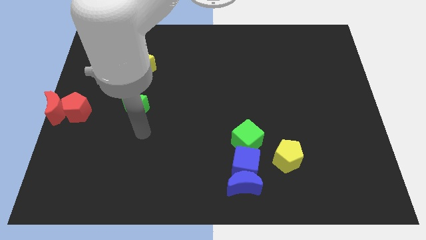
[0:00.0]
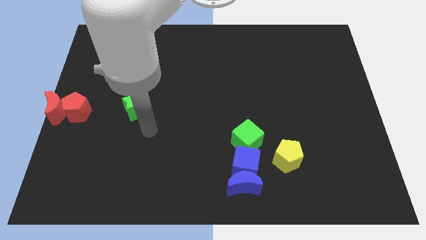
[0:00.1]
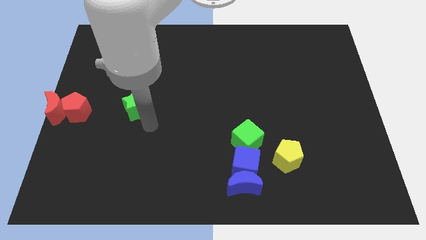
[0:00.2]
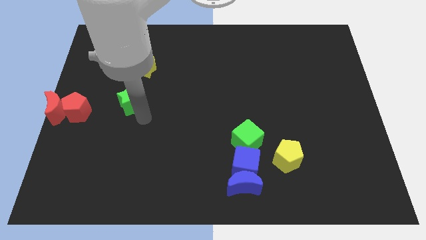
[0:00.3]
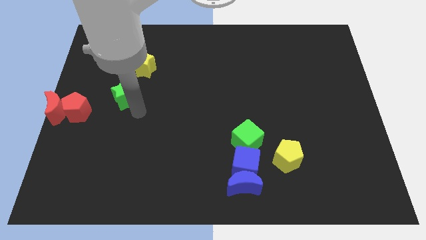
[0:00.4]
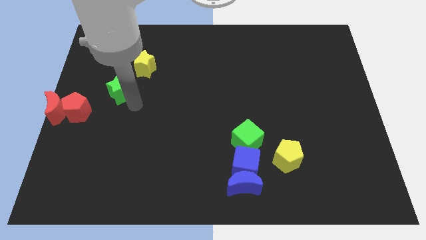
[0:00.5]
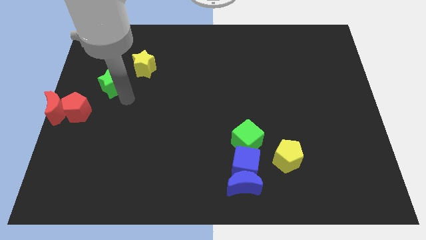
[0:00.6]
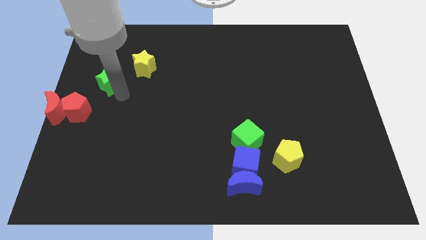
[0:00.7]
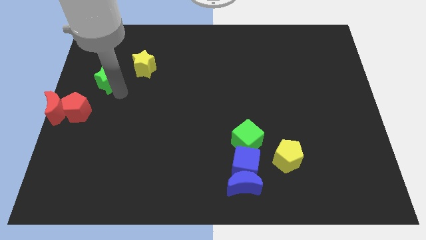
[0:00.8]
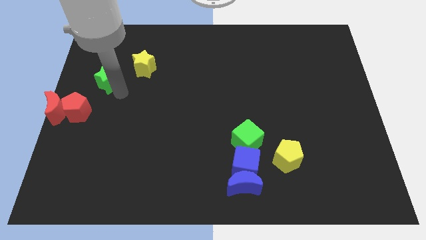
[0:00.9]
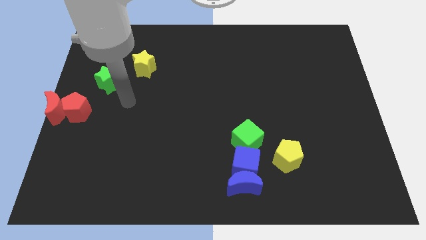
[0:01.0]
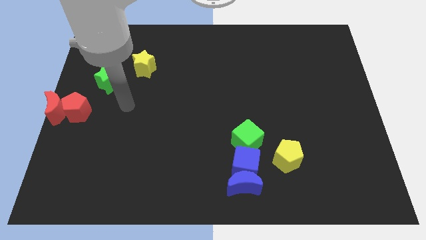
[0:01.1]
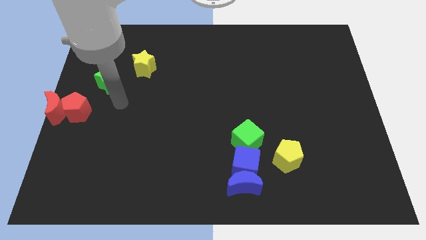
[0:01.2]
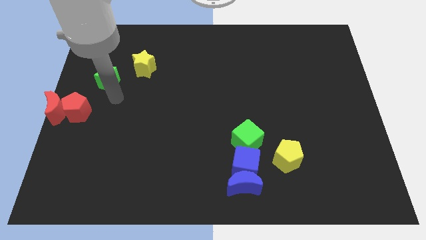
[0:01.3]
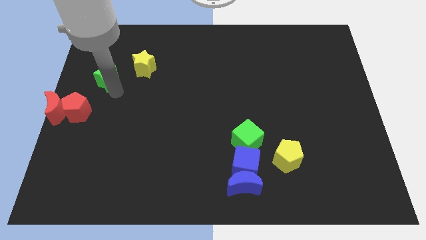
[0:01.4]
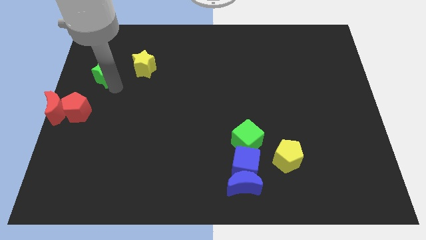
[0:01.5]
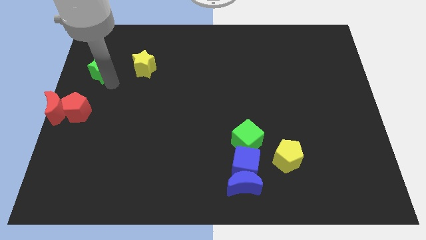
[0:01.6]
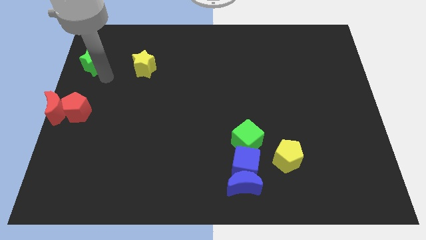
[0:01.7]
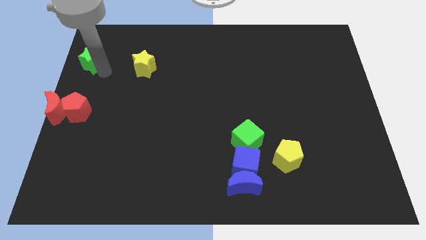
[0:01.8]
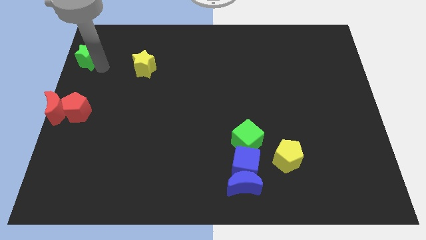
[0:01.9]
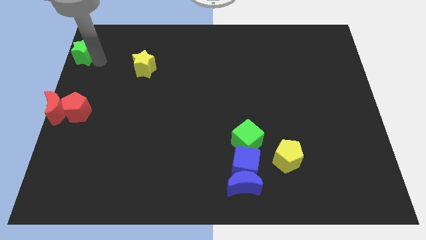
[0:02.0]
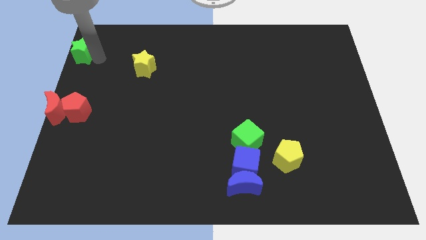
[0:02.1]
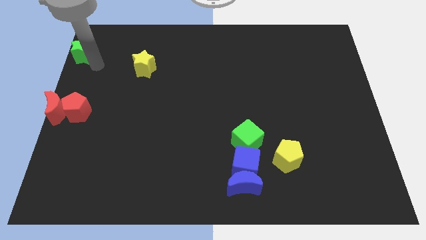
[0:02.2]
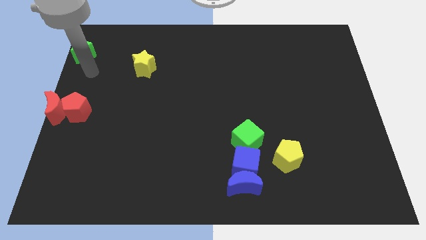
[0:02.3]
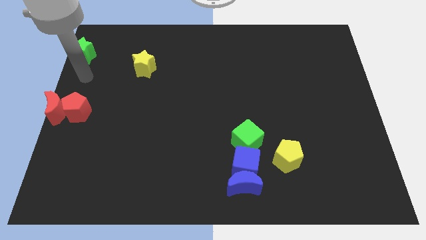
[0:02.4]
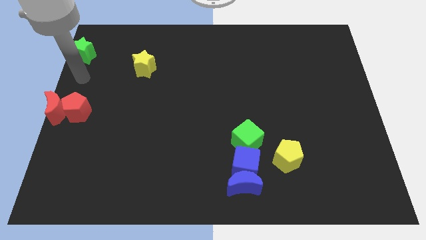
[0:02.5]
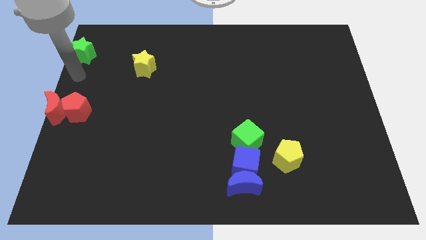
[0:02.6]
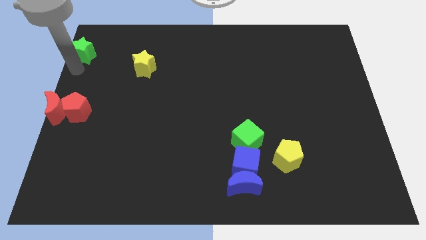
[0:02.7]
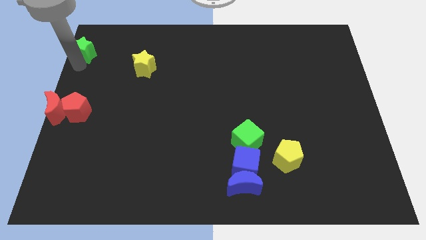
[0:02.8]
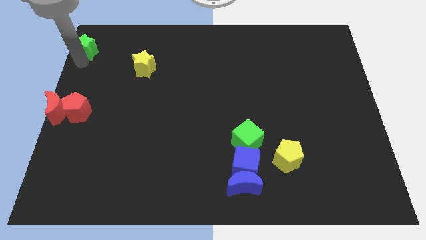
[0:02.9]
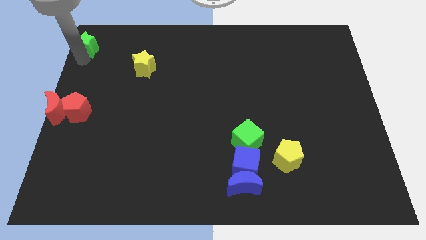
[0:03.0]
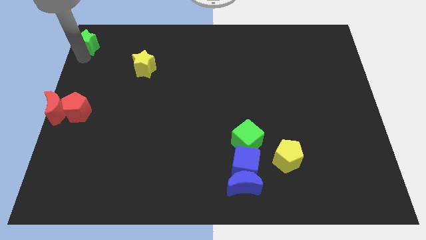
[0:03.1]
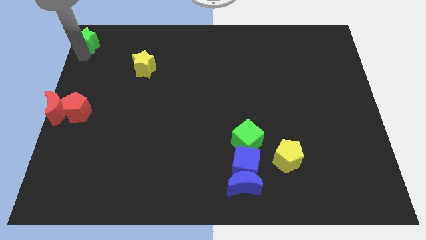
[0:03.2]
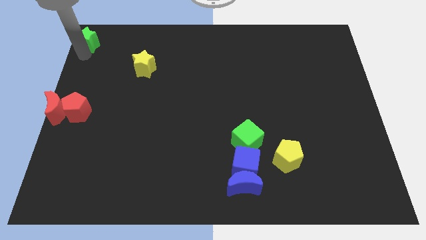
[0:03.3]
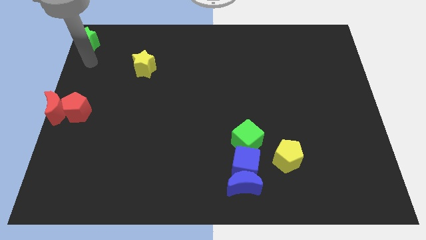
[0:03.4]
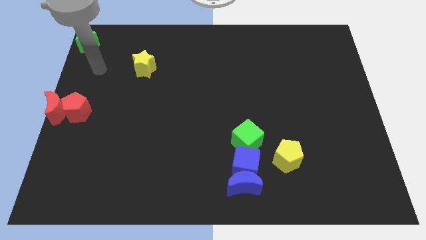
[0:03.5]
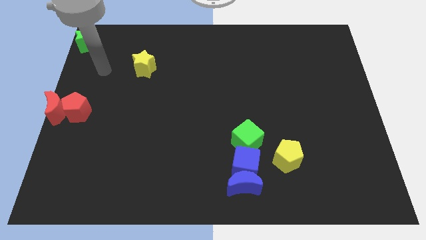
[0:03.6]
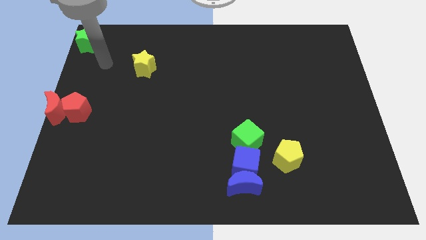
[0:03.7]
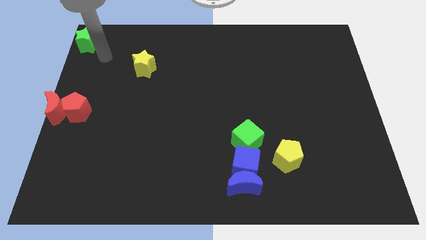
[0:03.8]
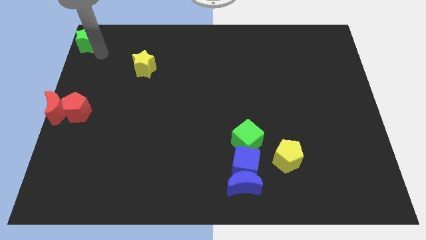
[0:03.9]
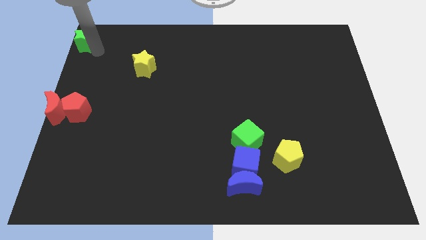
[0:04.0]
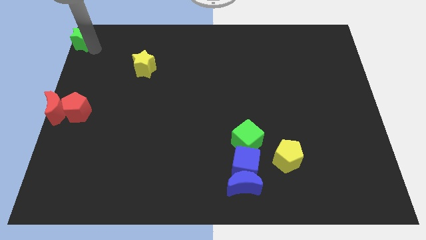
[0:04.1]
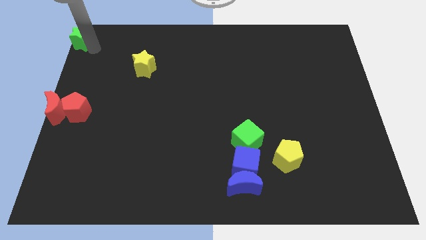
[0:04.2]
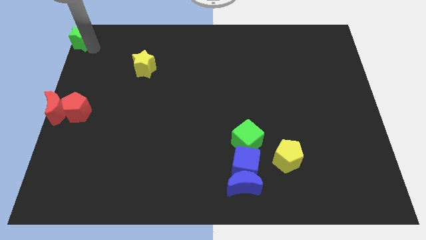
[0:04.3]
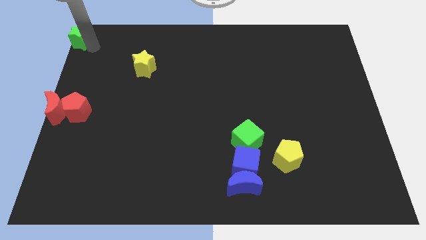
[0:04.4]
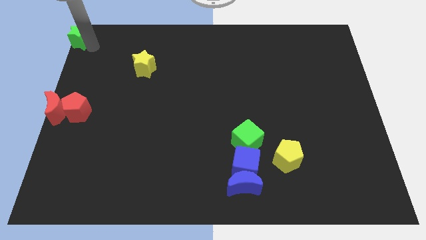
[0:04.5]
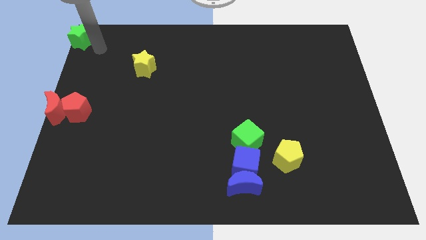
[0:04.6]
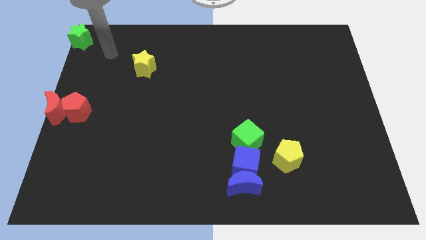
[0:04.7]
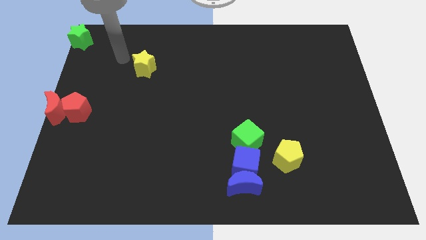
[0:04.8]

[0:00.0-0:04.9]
move the green star to the top left corner

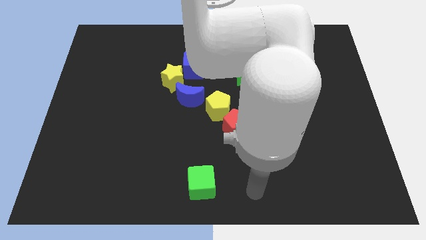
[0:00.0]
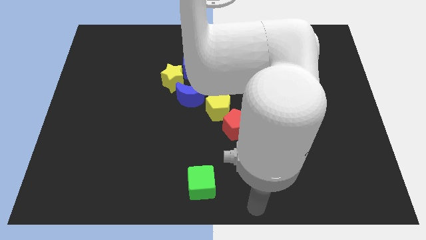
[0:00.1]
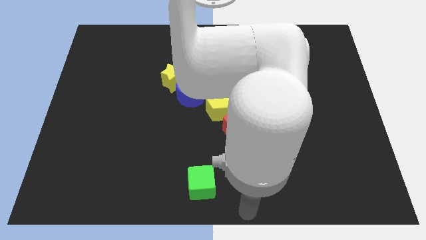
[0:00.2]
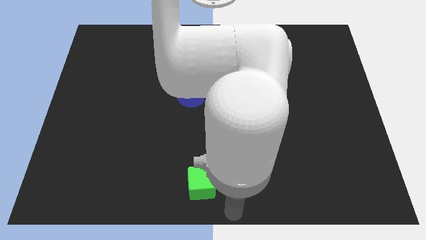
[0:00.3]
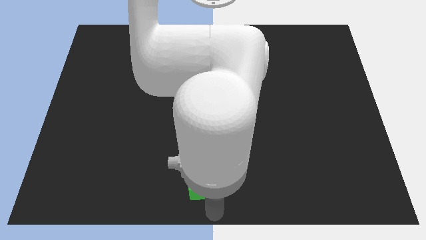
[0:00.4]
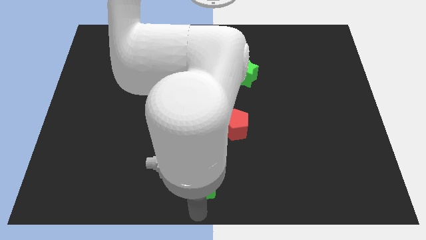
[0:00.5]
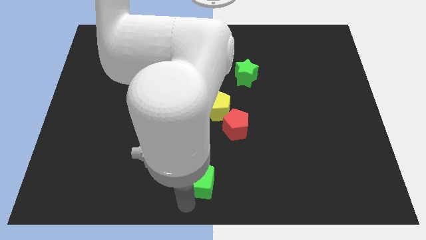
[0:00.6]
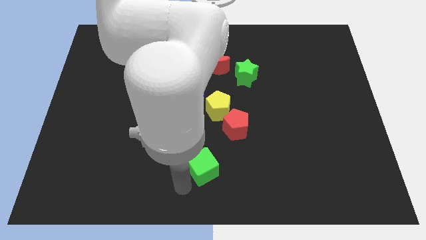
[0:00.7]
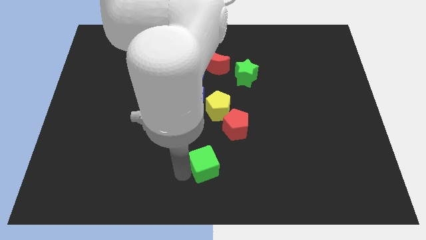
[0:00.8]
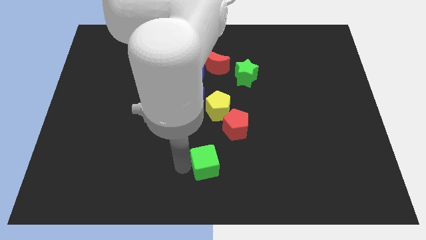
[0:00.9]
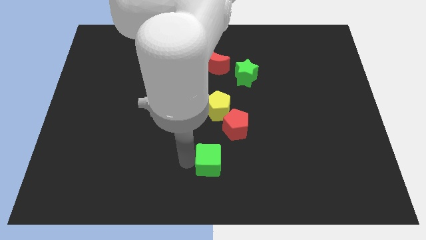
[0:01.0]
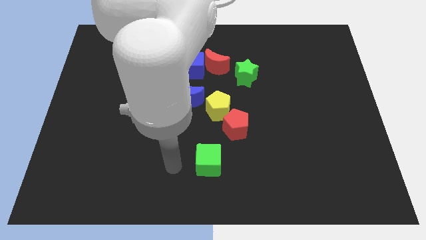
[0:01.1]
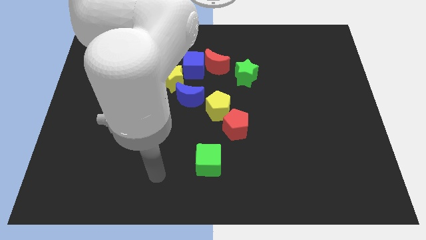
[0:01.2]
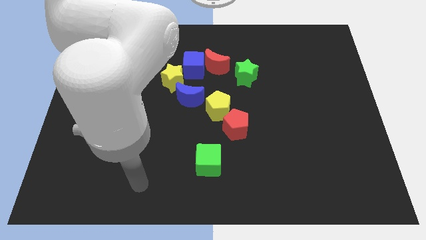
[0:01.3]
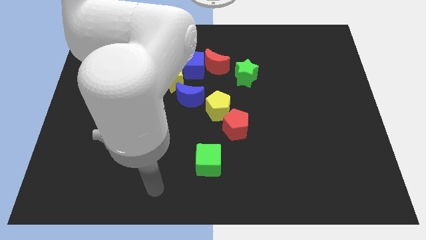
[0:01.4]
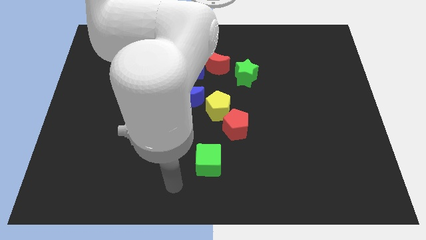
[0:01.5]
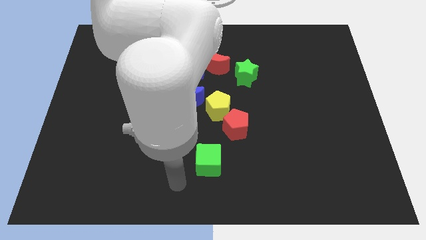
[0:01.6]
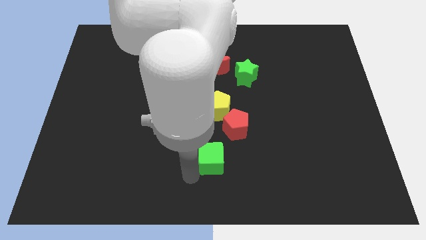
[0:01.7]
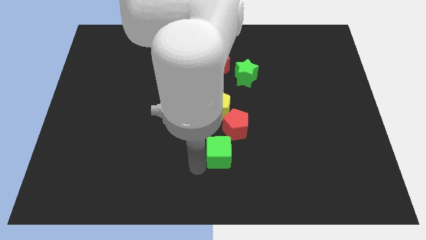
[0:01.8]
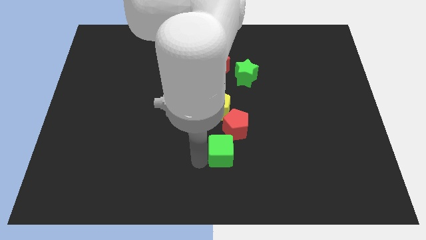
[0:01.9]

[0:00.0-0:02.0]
move the green cube towards center

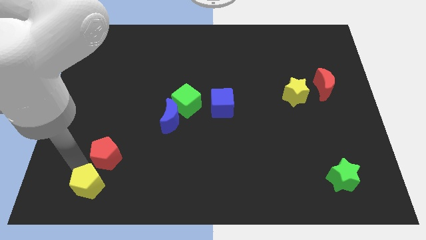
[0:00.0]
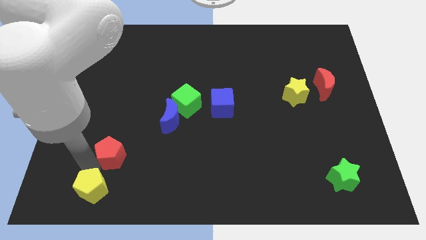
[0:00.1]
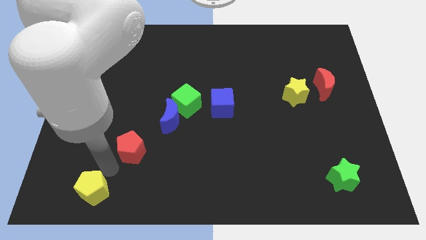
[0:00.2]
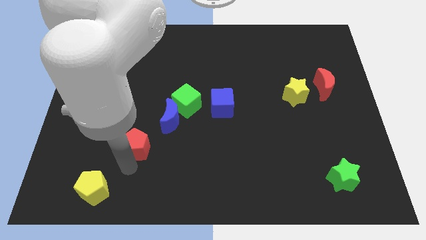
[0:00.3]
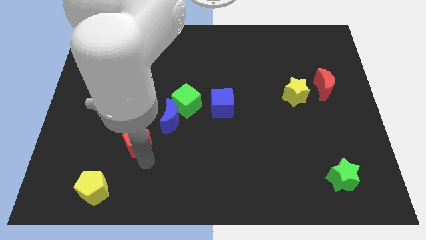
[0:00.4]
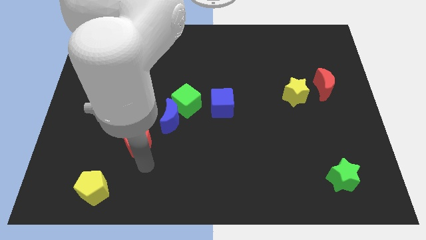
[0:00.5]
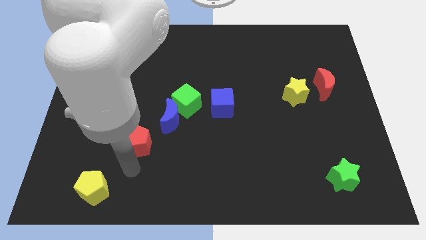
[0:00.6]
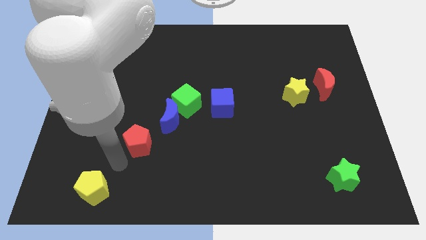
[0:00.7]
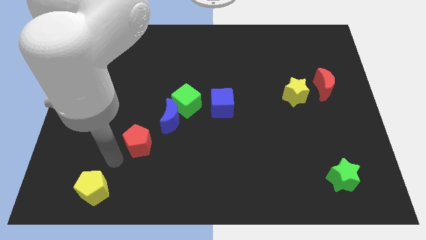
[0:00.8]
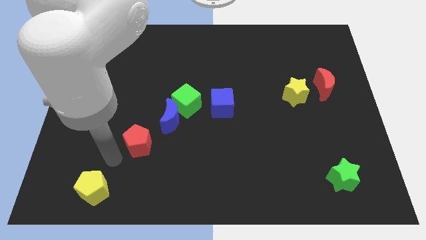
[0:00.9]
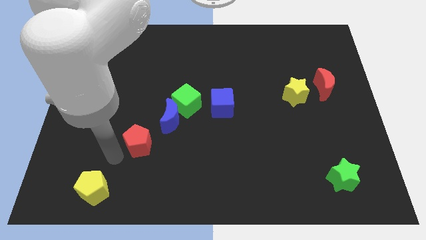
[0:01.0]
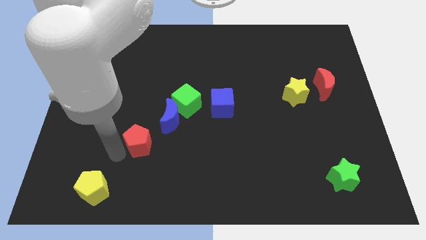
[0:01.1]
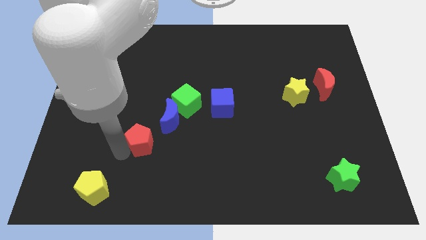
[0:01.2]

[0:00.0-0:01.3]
separate red pentagon from yellow pentagon

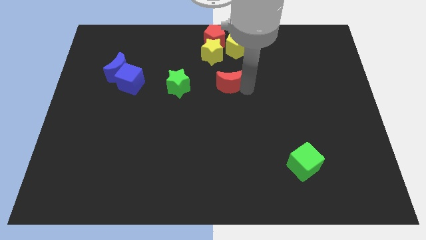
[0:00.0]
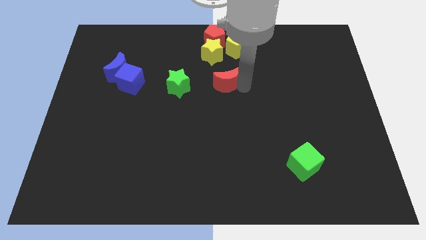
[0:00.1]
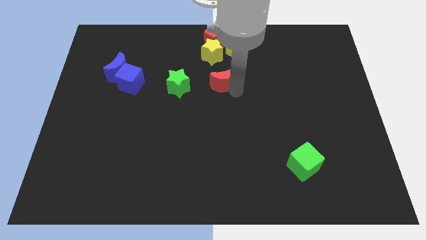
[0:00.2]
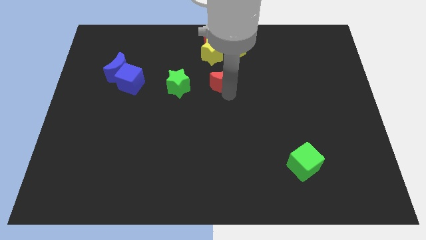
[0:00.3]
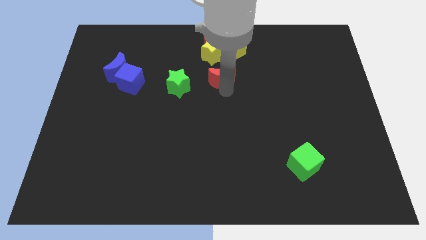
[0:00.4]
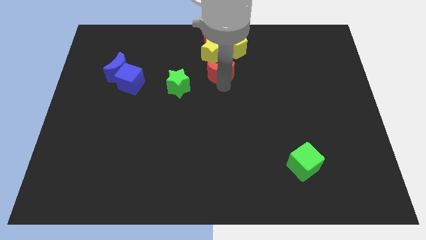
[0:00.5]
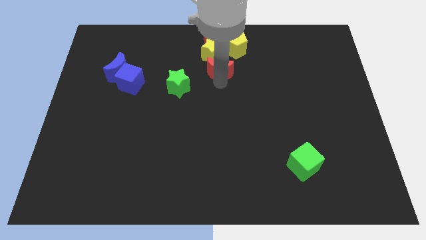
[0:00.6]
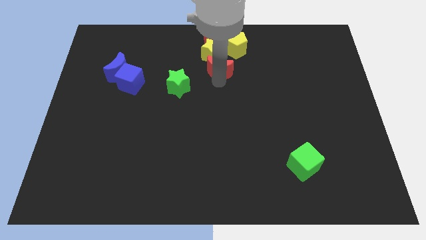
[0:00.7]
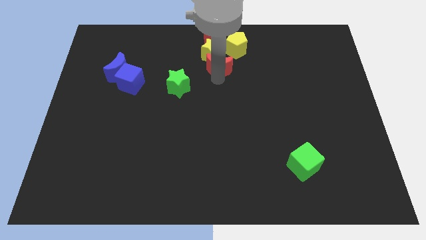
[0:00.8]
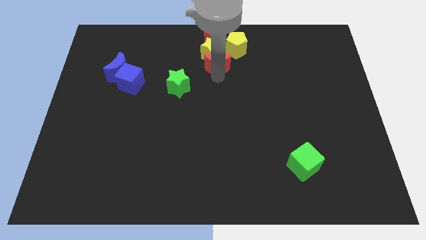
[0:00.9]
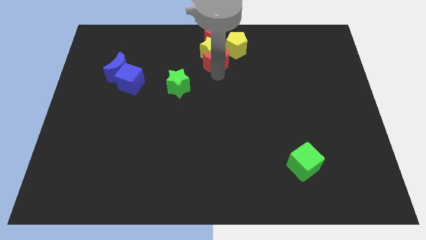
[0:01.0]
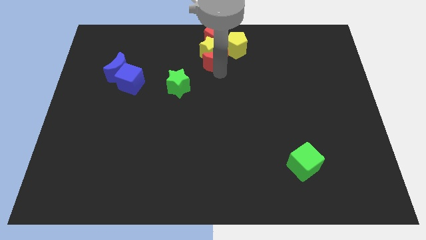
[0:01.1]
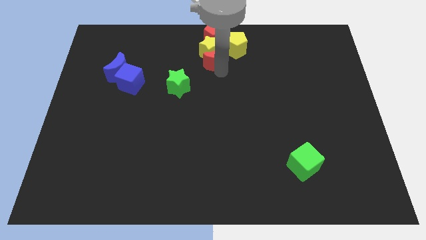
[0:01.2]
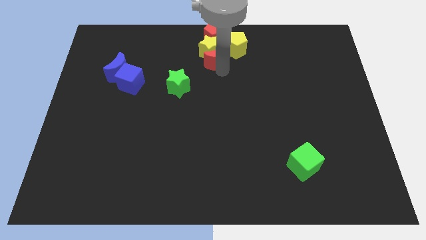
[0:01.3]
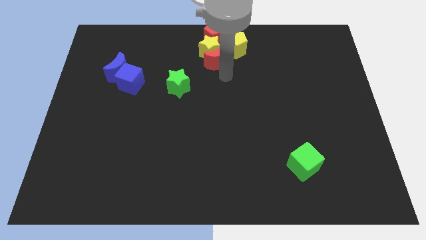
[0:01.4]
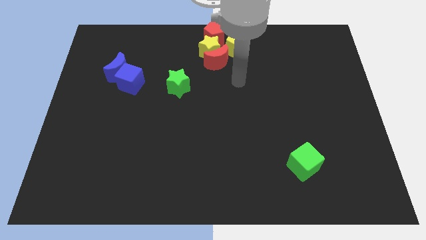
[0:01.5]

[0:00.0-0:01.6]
move the red crescent at the bottom of the yellow star
